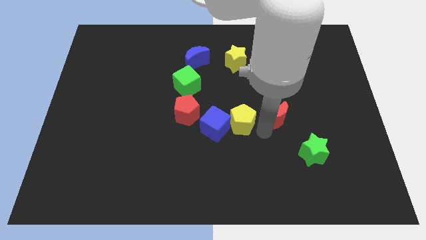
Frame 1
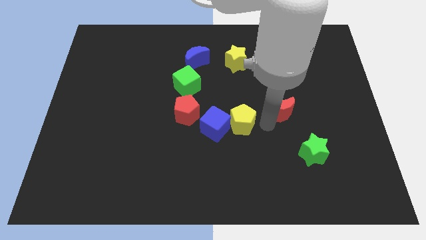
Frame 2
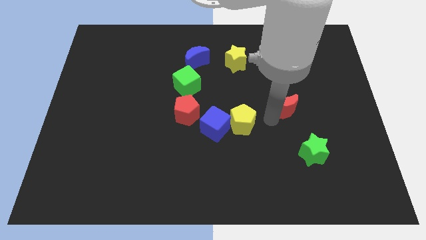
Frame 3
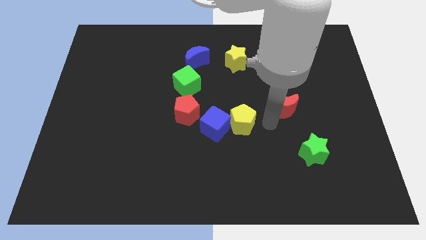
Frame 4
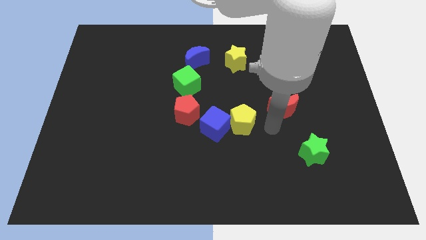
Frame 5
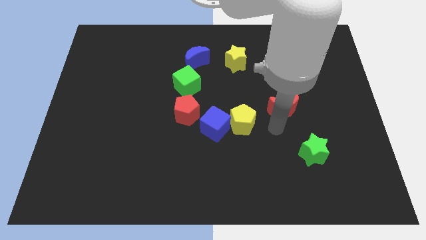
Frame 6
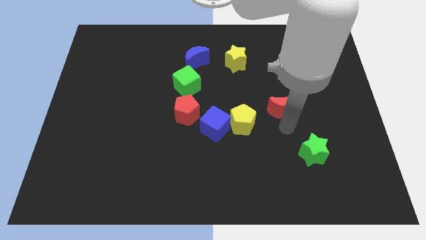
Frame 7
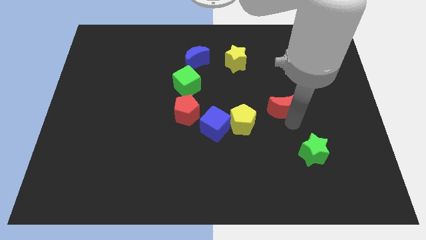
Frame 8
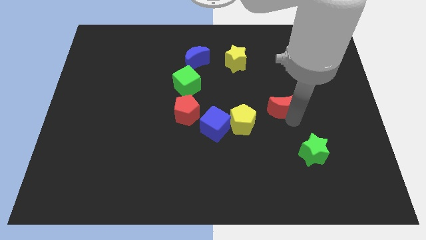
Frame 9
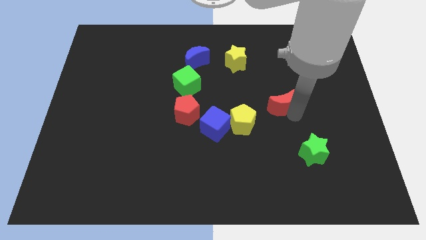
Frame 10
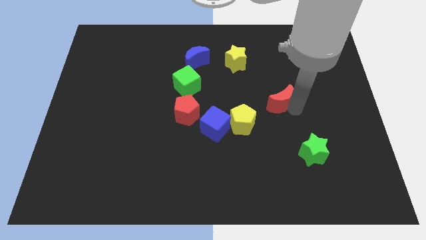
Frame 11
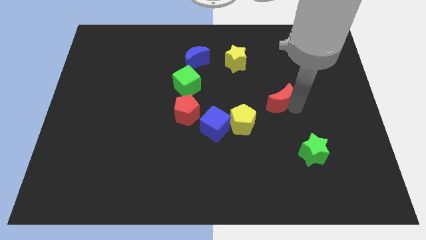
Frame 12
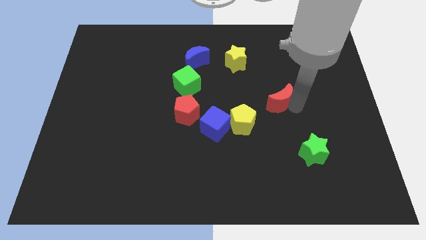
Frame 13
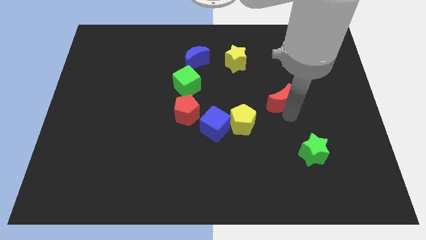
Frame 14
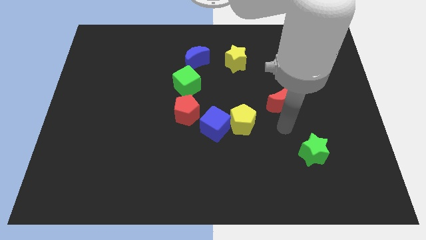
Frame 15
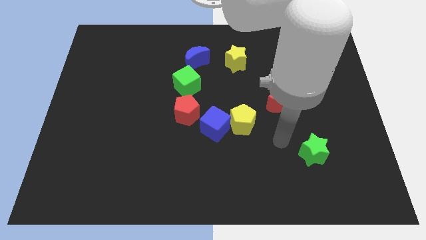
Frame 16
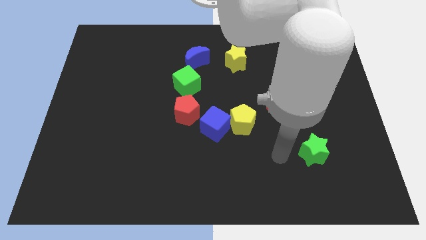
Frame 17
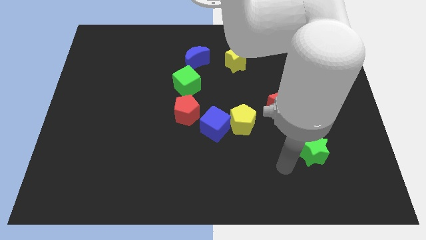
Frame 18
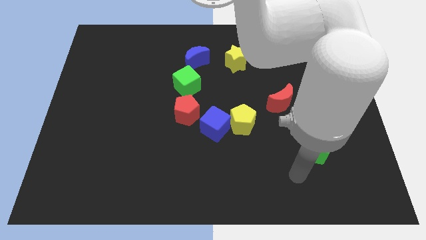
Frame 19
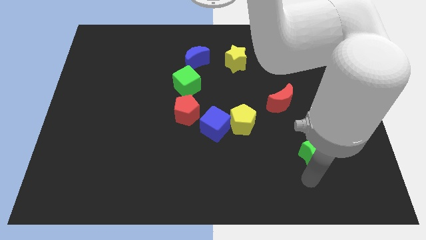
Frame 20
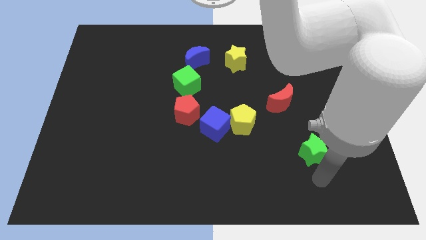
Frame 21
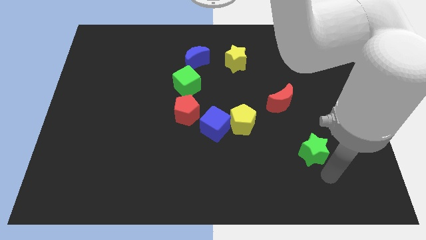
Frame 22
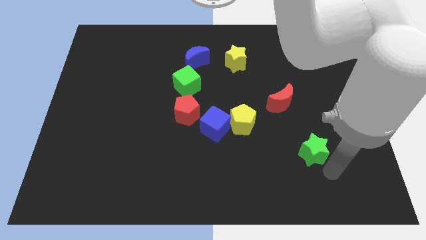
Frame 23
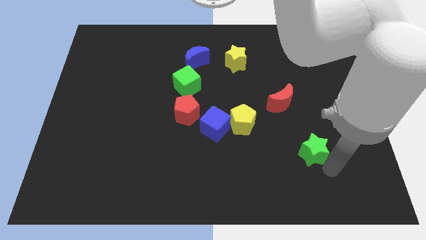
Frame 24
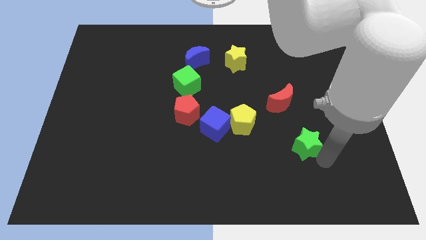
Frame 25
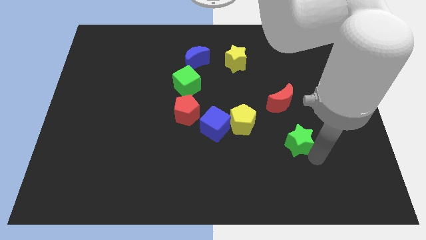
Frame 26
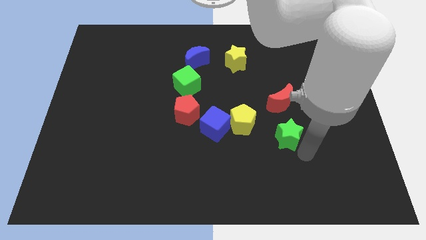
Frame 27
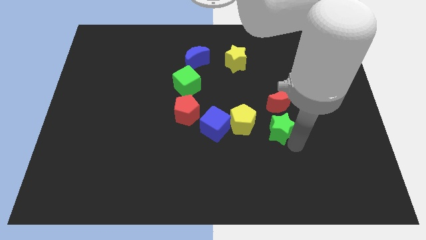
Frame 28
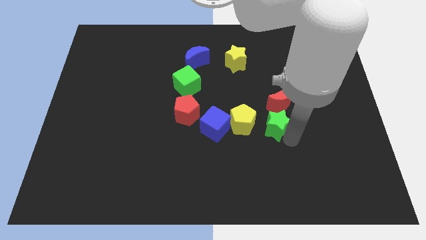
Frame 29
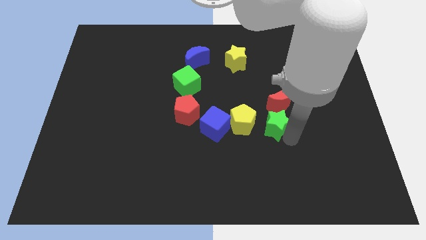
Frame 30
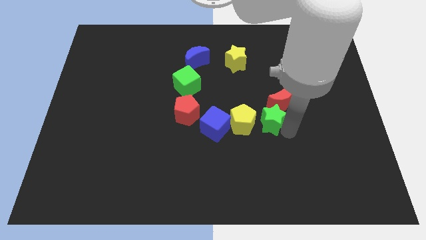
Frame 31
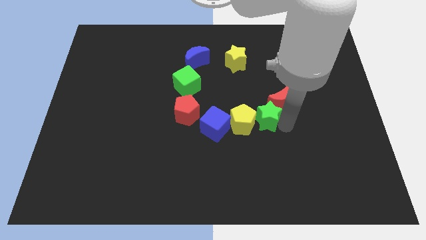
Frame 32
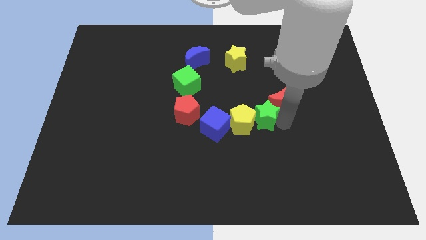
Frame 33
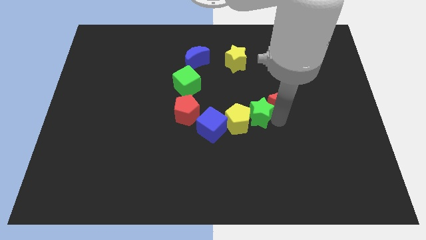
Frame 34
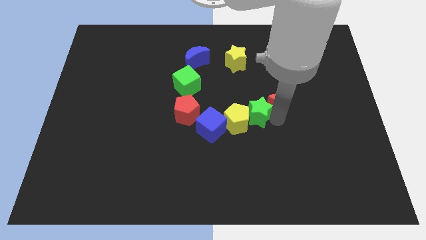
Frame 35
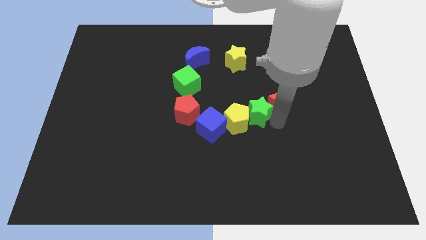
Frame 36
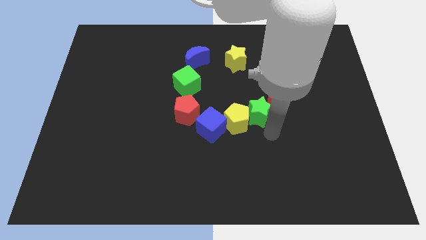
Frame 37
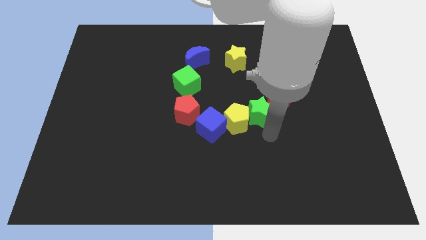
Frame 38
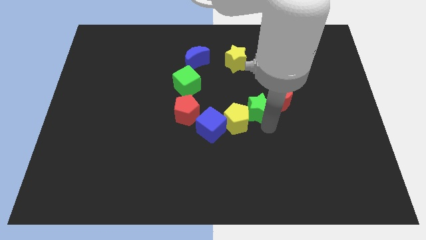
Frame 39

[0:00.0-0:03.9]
place the green star in between yellow pentagon and red crescent

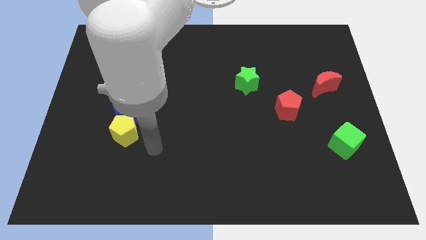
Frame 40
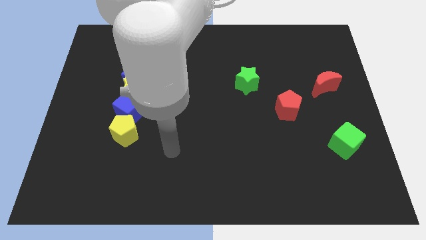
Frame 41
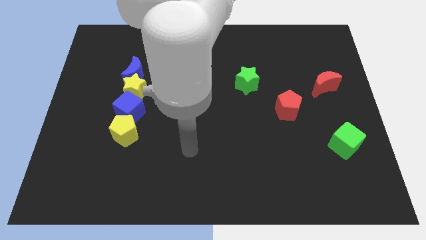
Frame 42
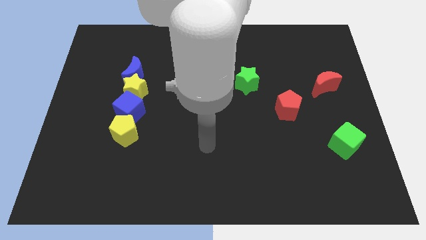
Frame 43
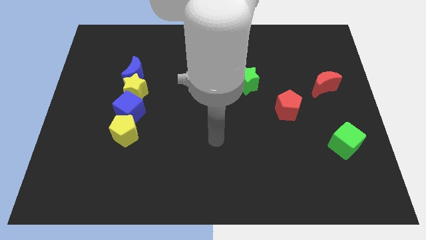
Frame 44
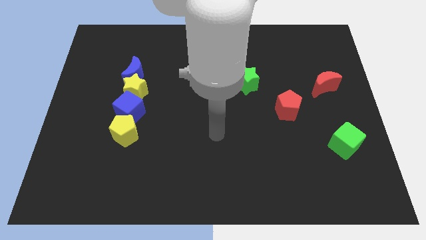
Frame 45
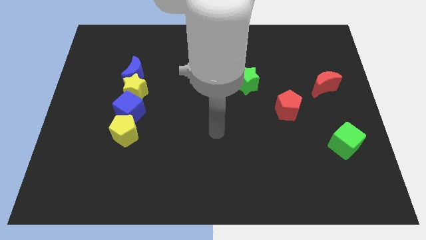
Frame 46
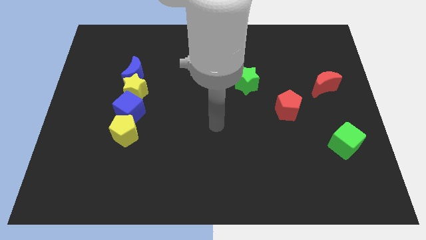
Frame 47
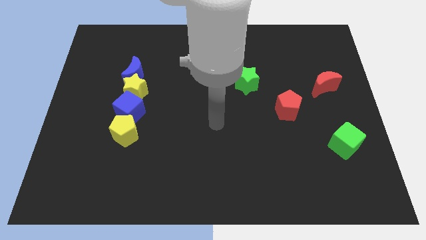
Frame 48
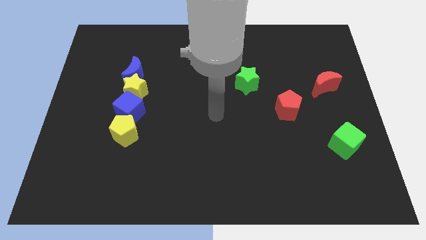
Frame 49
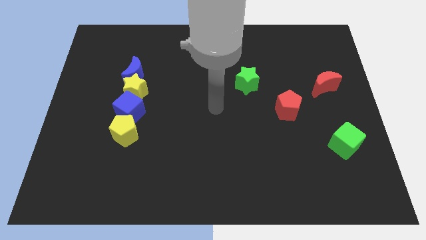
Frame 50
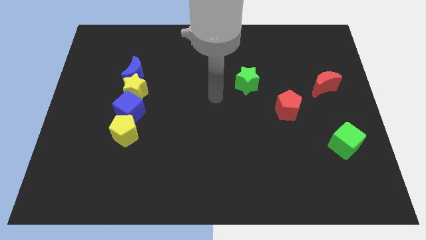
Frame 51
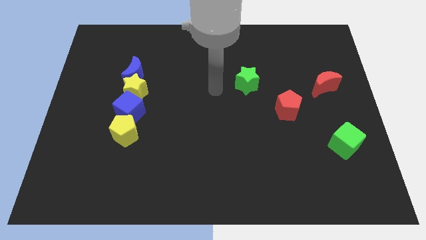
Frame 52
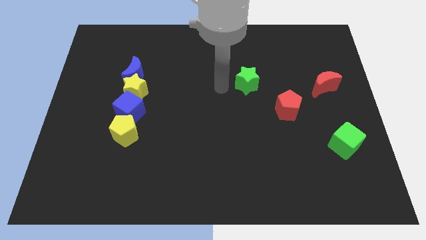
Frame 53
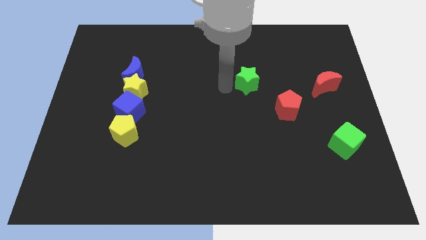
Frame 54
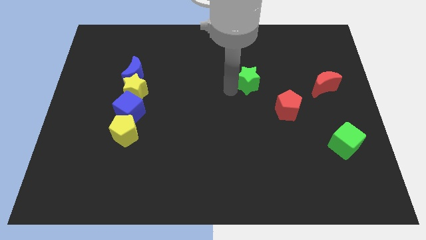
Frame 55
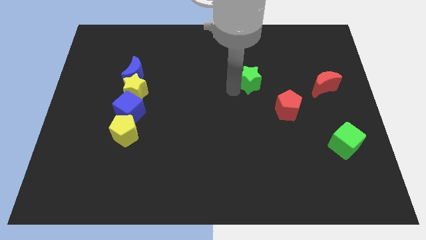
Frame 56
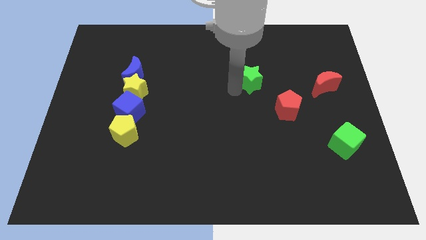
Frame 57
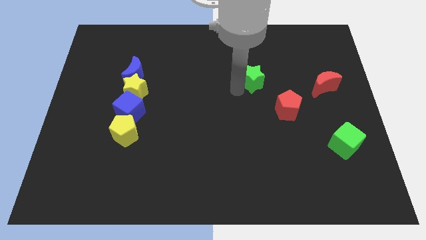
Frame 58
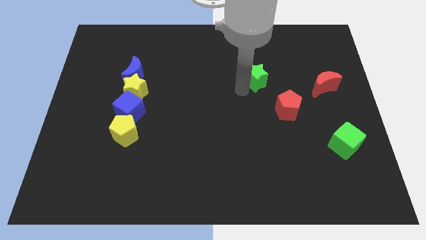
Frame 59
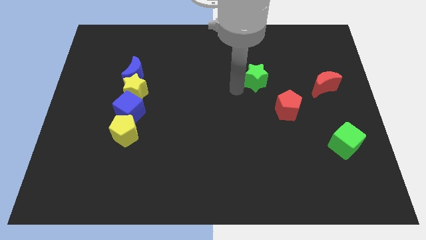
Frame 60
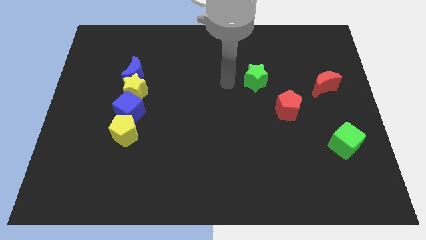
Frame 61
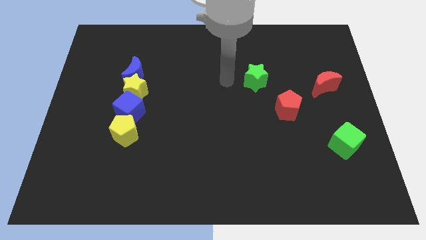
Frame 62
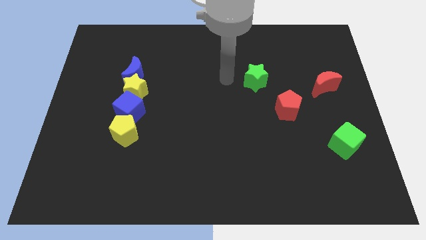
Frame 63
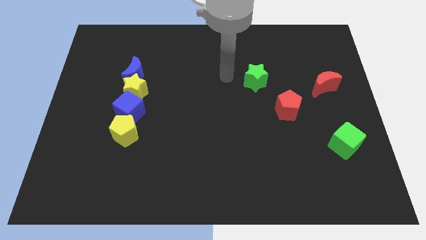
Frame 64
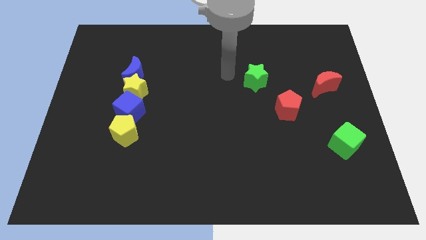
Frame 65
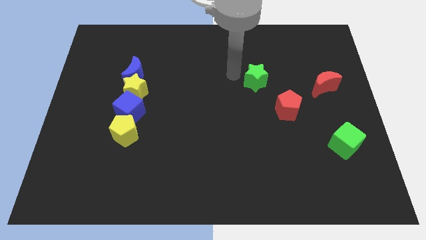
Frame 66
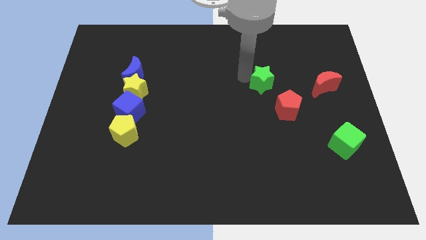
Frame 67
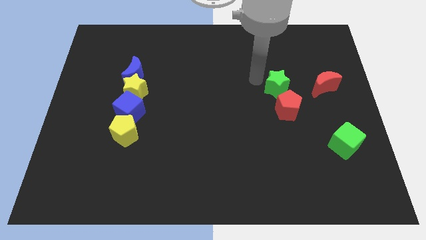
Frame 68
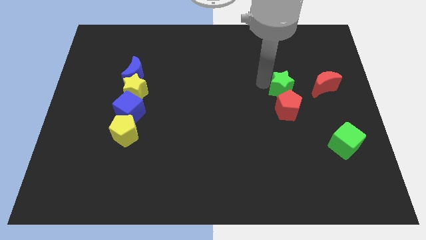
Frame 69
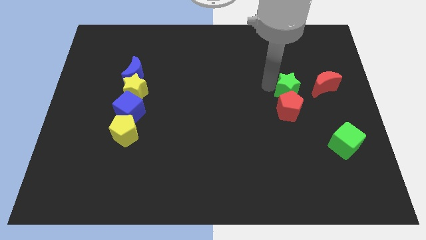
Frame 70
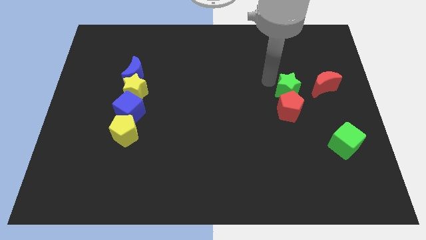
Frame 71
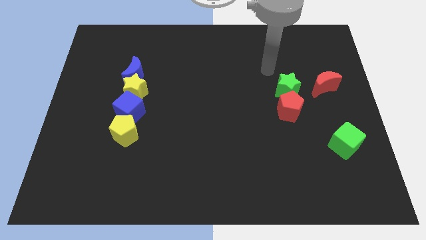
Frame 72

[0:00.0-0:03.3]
move the green star to the top of the red pentagon

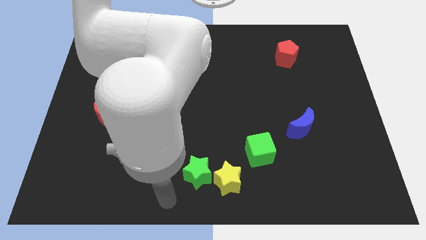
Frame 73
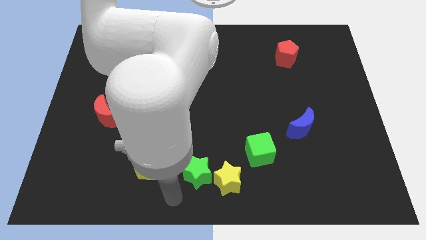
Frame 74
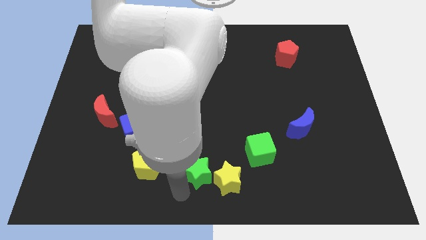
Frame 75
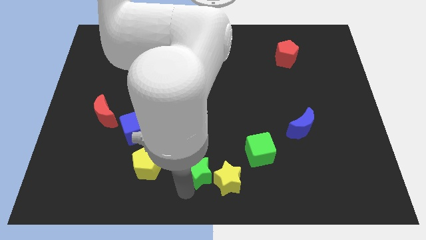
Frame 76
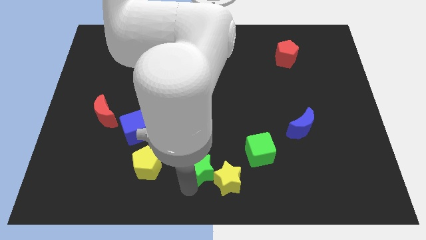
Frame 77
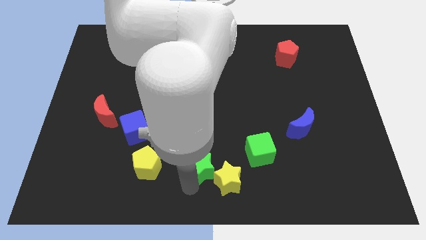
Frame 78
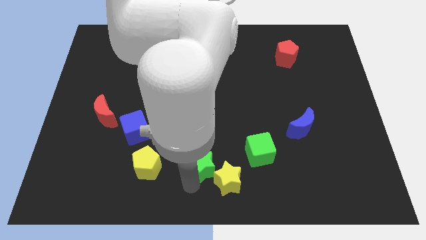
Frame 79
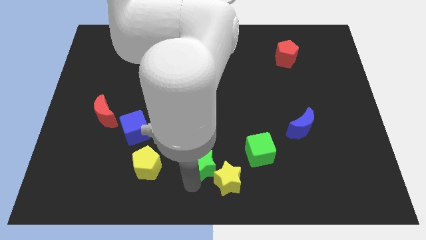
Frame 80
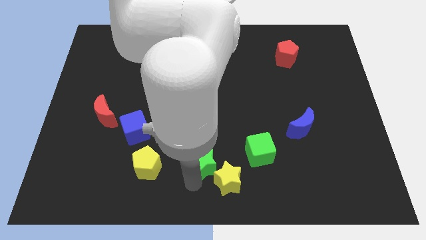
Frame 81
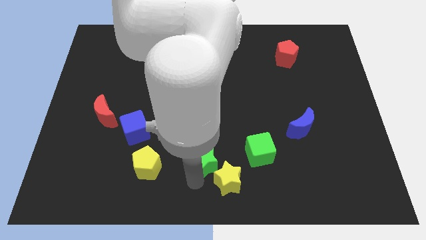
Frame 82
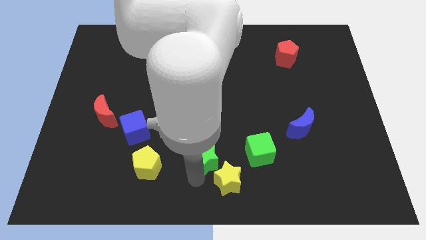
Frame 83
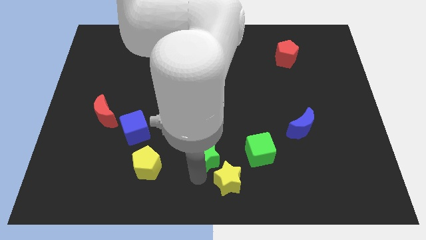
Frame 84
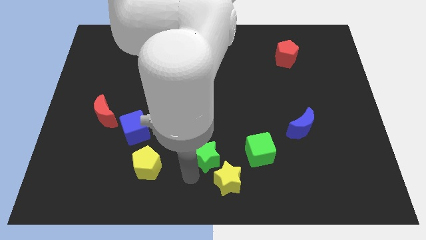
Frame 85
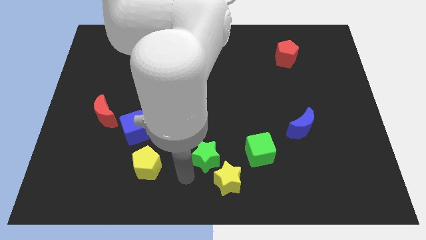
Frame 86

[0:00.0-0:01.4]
adjust the green star in between the yellow pentagon and green cube

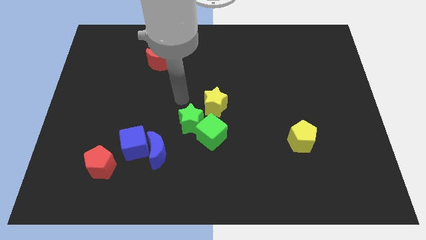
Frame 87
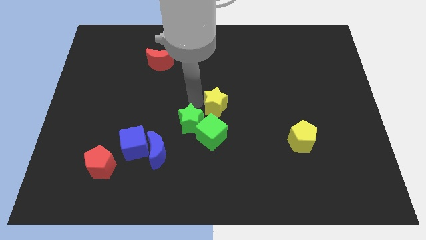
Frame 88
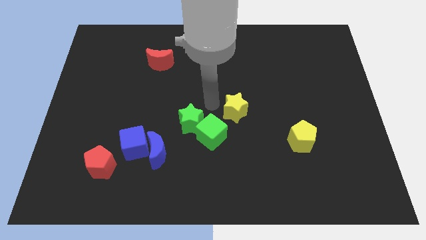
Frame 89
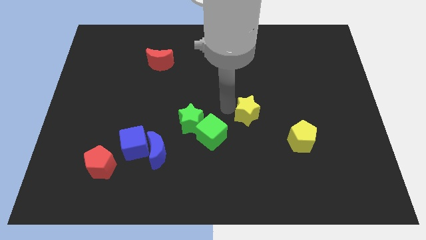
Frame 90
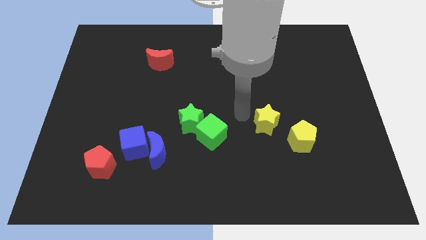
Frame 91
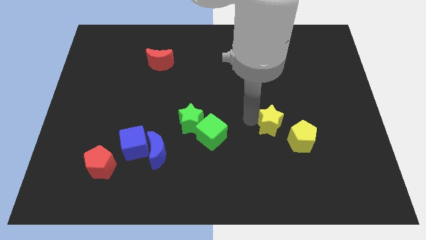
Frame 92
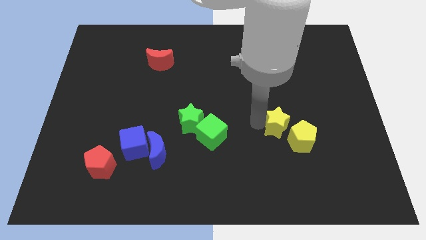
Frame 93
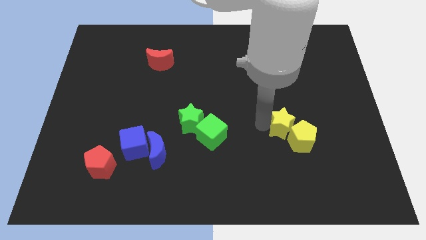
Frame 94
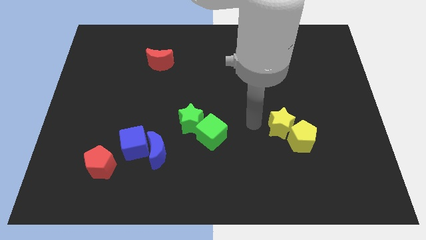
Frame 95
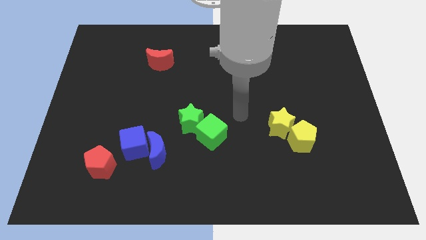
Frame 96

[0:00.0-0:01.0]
move the yellow star close to the yellow pentagon
